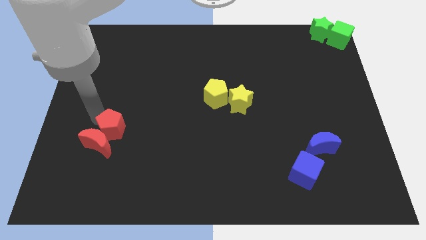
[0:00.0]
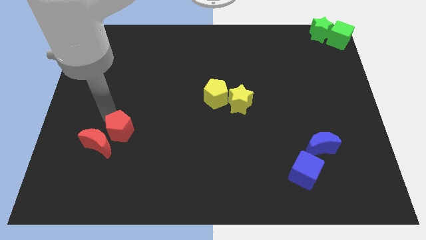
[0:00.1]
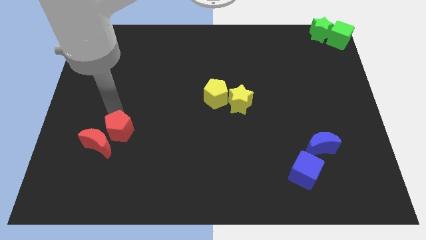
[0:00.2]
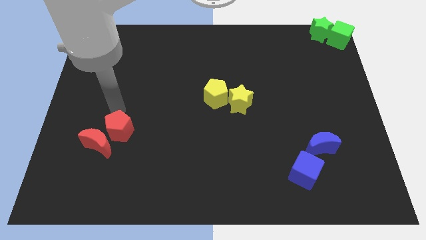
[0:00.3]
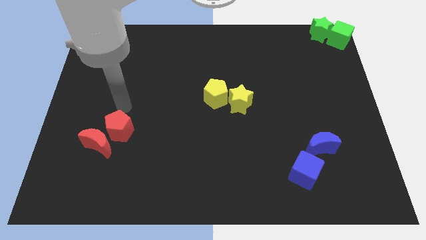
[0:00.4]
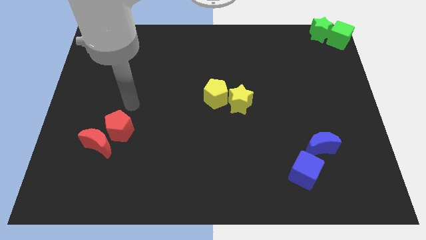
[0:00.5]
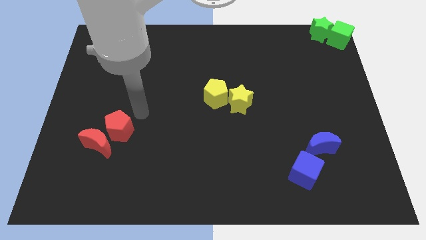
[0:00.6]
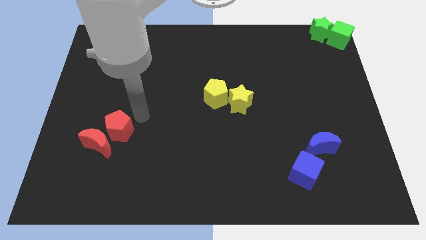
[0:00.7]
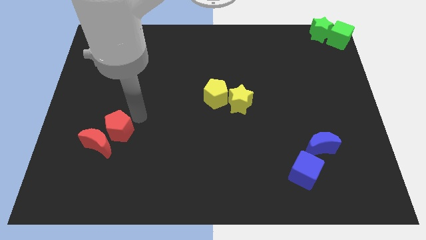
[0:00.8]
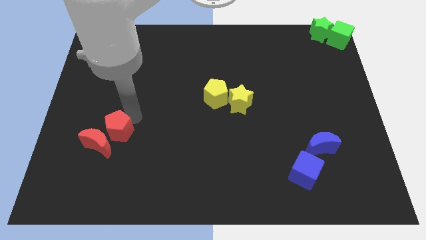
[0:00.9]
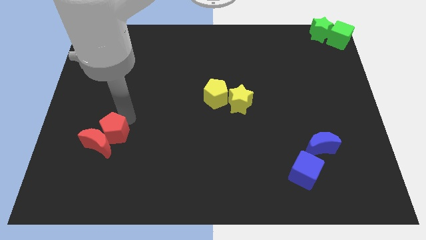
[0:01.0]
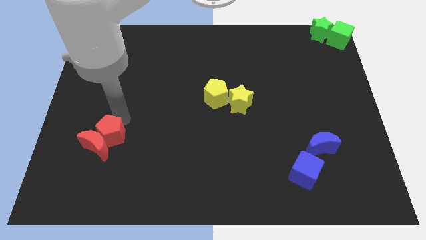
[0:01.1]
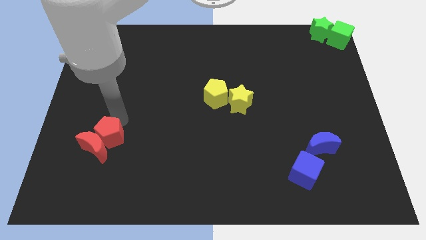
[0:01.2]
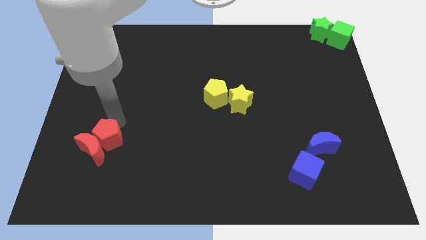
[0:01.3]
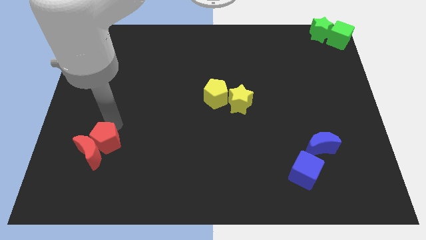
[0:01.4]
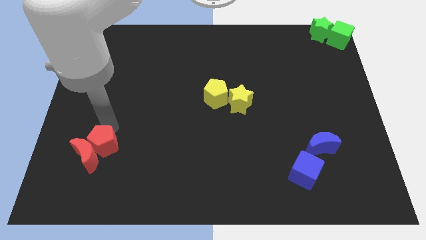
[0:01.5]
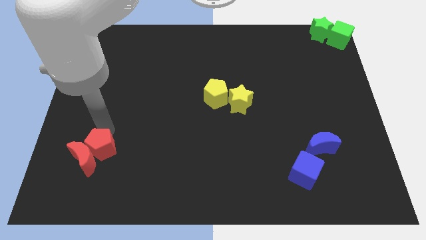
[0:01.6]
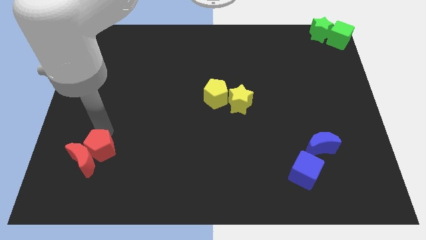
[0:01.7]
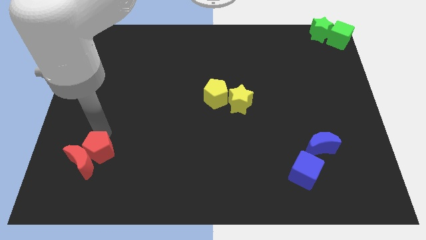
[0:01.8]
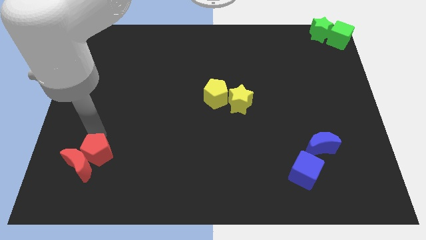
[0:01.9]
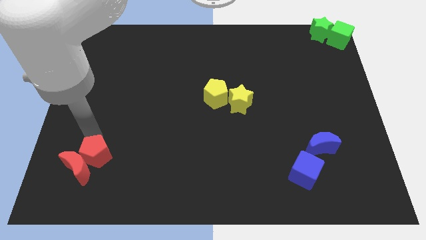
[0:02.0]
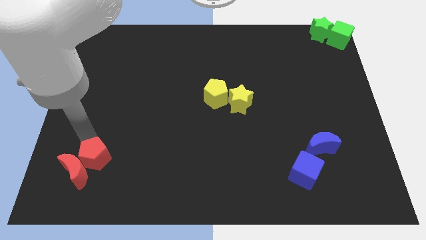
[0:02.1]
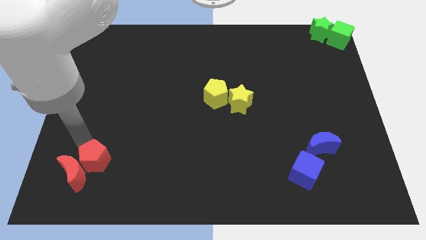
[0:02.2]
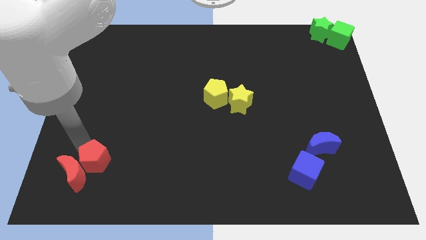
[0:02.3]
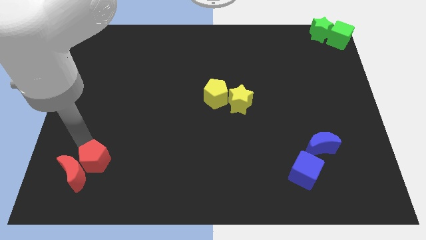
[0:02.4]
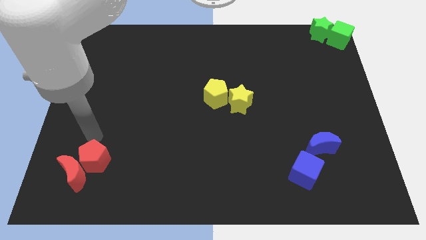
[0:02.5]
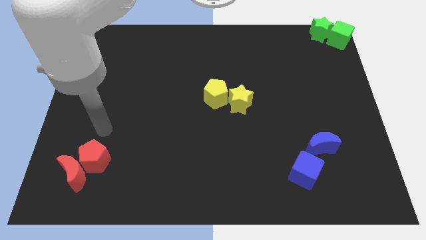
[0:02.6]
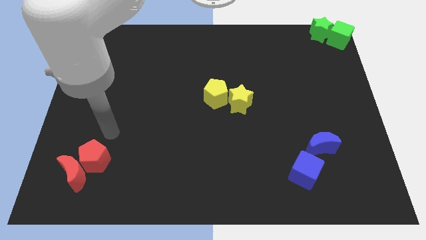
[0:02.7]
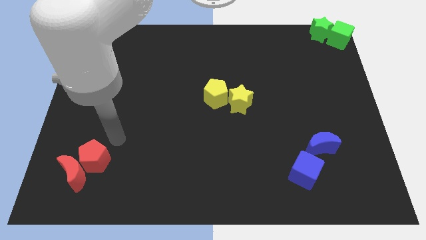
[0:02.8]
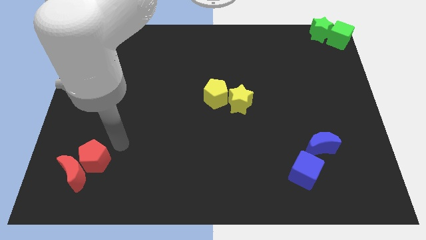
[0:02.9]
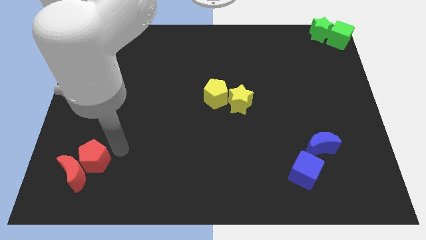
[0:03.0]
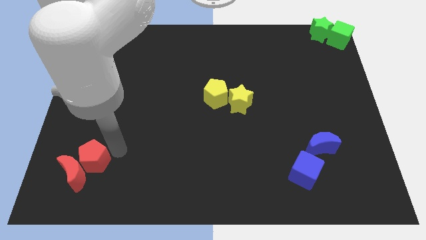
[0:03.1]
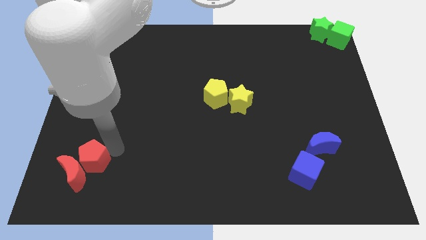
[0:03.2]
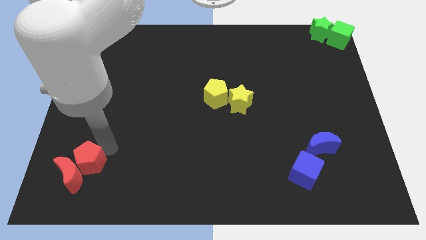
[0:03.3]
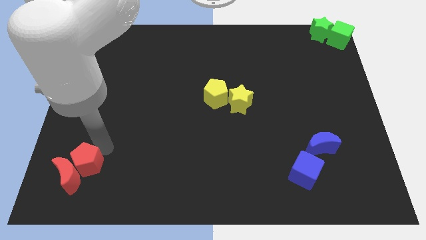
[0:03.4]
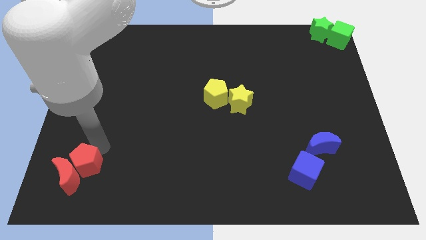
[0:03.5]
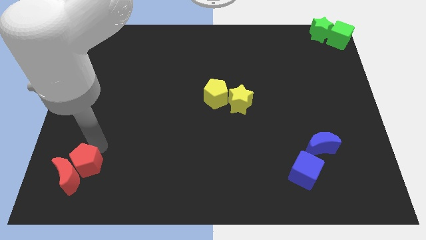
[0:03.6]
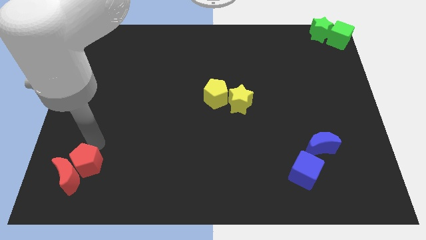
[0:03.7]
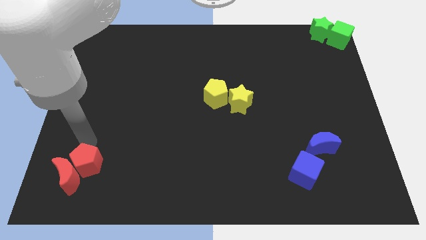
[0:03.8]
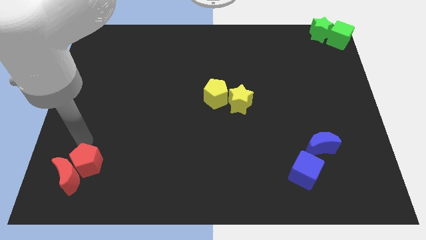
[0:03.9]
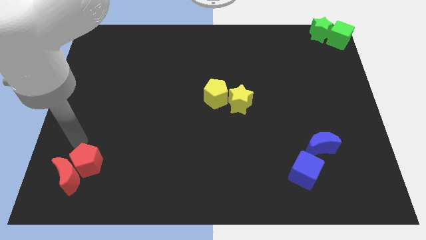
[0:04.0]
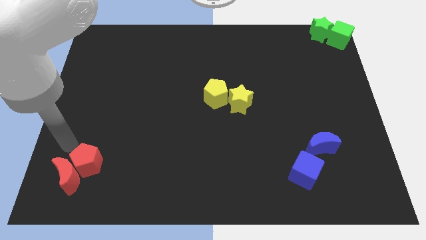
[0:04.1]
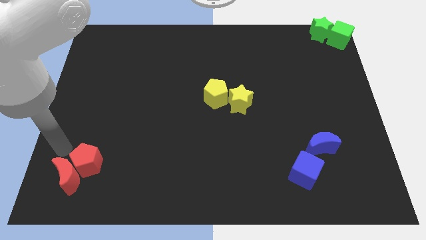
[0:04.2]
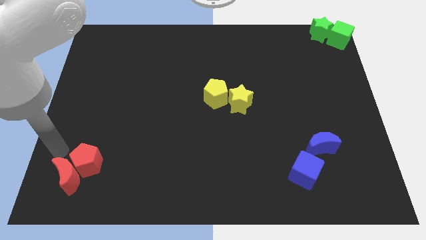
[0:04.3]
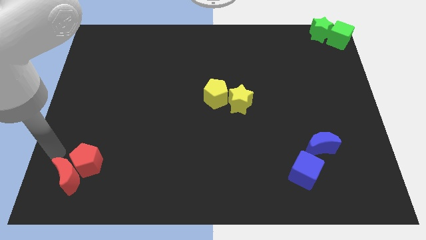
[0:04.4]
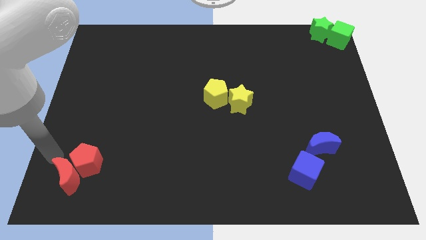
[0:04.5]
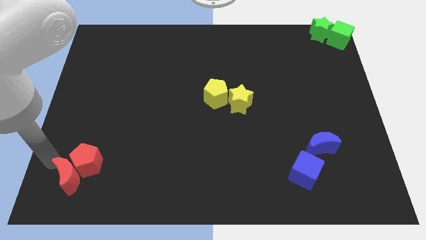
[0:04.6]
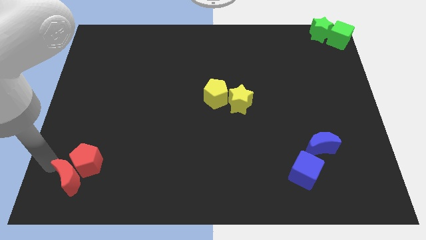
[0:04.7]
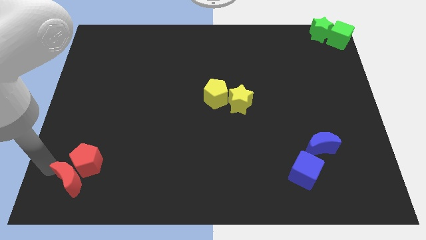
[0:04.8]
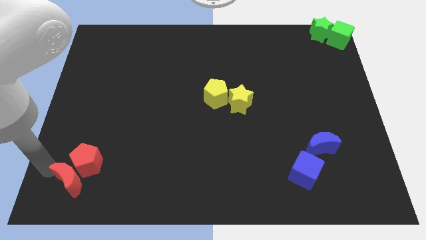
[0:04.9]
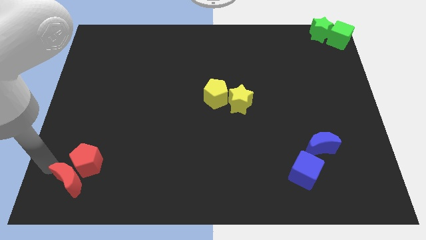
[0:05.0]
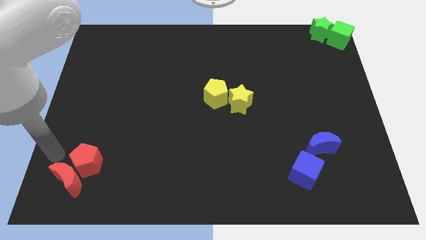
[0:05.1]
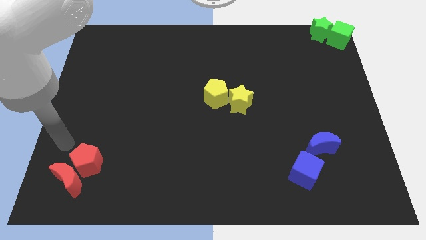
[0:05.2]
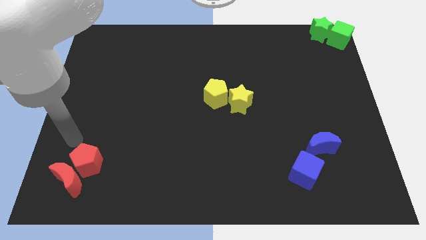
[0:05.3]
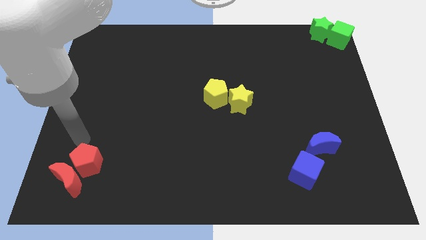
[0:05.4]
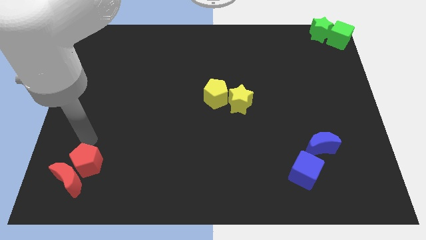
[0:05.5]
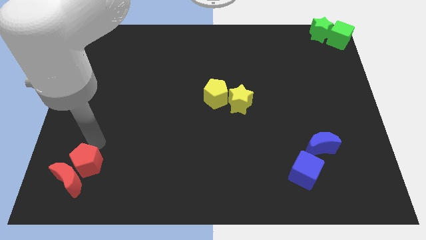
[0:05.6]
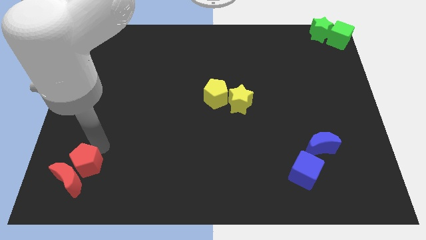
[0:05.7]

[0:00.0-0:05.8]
push the red pentagon and red moon to the left side of the board

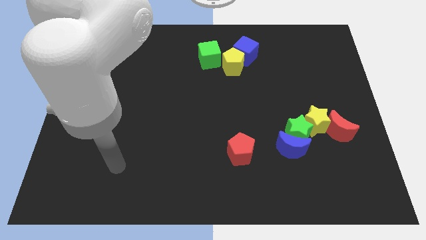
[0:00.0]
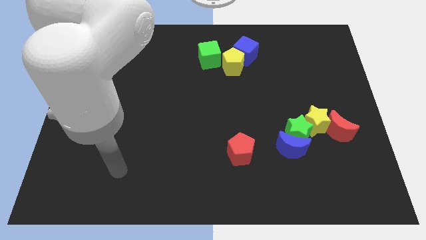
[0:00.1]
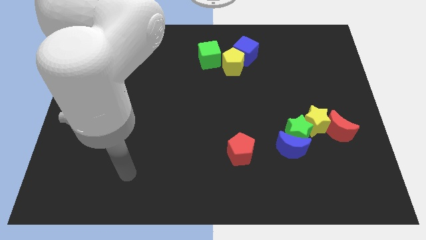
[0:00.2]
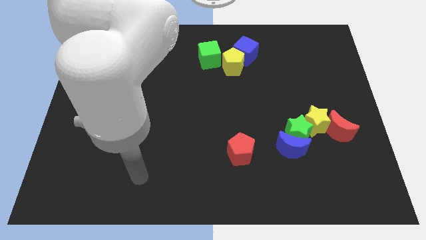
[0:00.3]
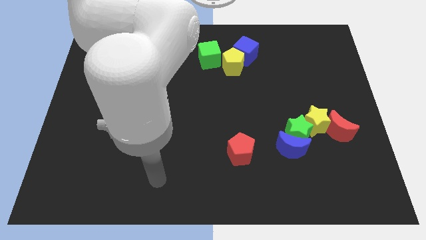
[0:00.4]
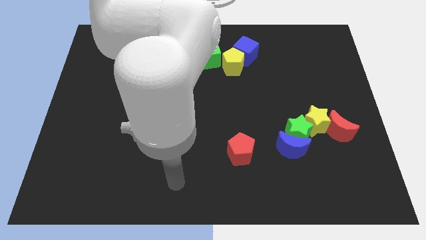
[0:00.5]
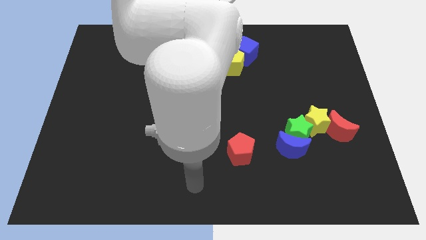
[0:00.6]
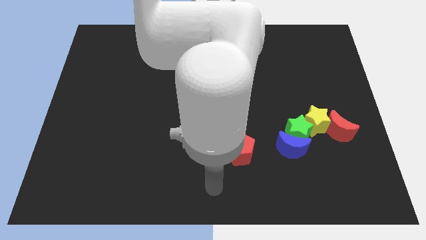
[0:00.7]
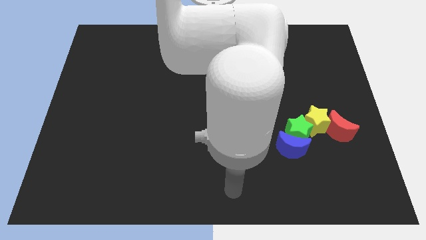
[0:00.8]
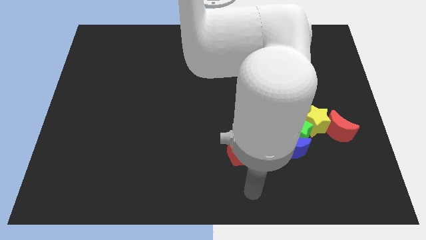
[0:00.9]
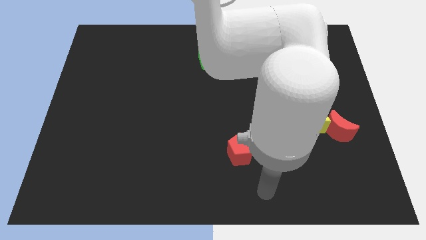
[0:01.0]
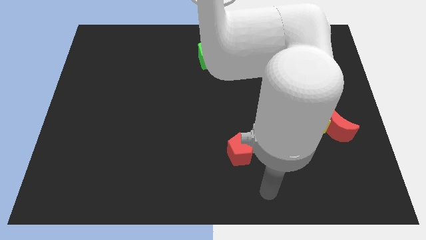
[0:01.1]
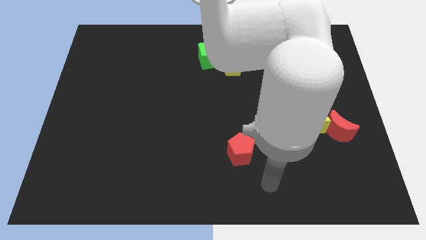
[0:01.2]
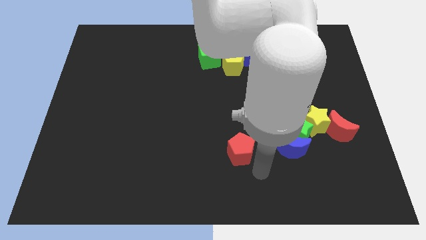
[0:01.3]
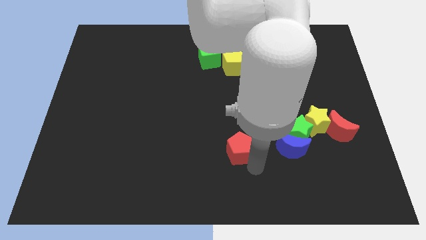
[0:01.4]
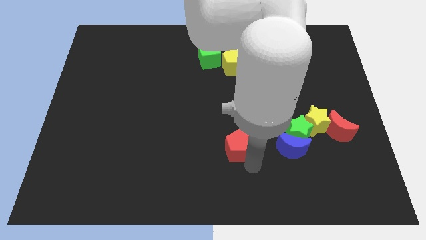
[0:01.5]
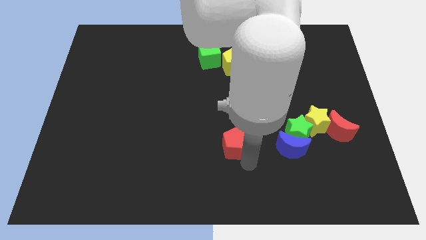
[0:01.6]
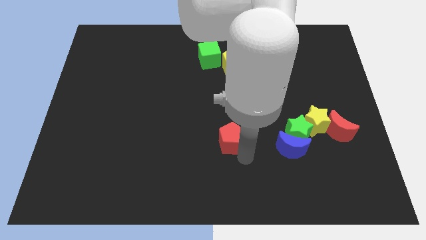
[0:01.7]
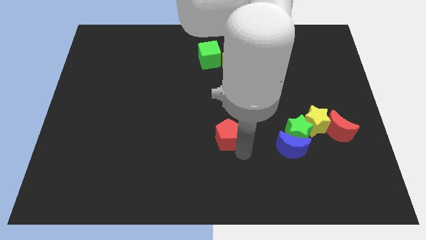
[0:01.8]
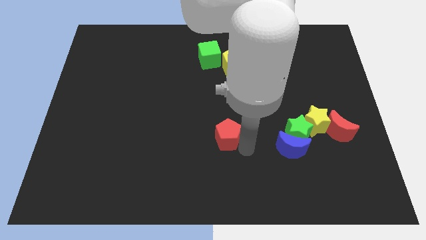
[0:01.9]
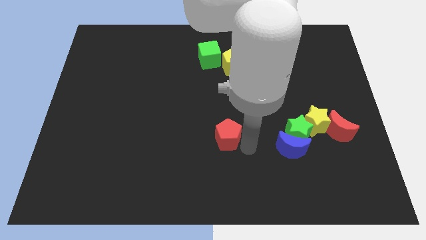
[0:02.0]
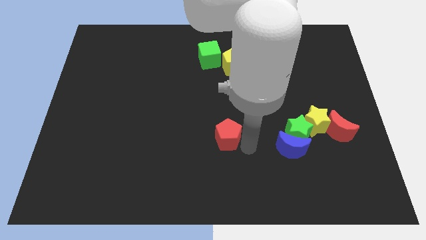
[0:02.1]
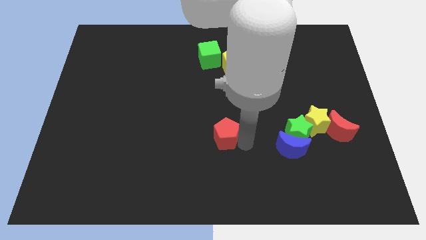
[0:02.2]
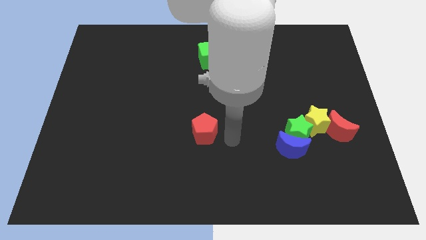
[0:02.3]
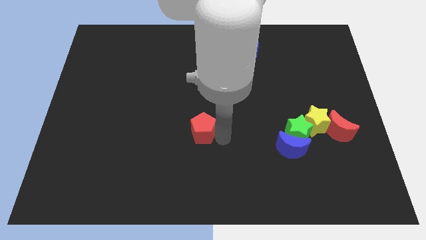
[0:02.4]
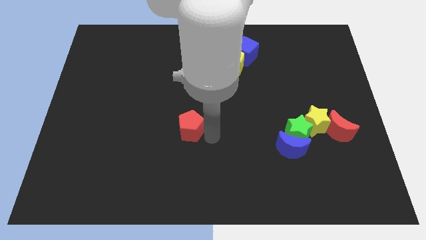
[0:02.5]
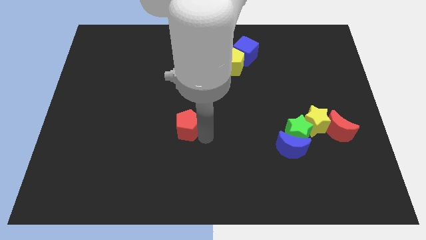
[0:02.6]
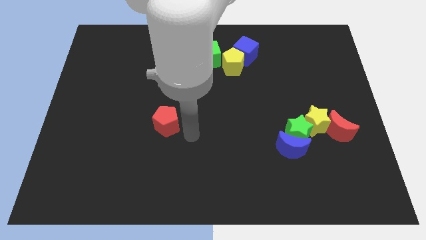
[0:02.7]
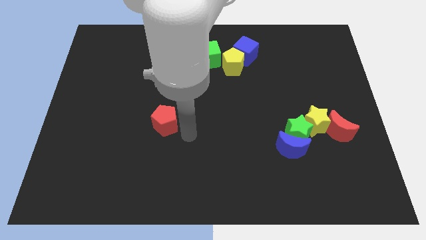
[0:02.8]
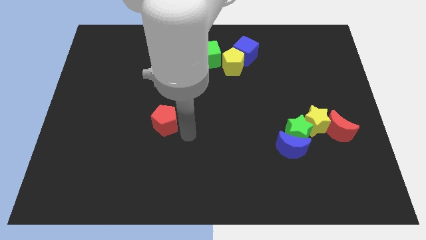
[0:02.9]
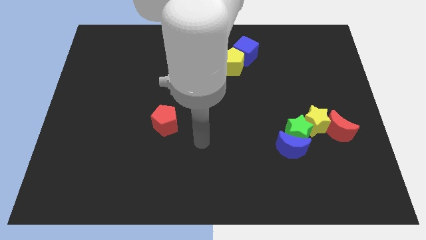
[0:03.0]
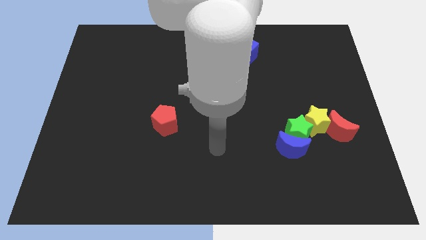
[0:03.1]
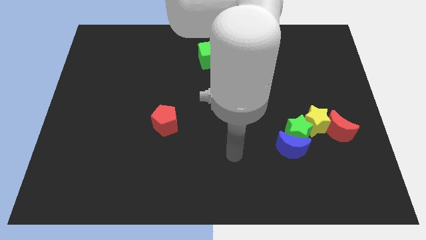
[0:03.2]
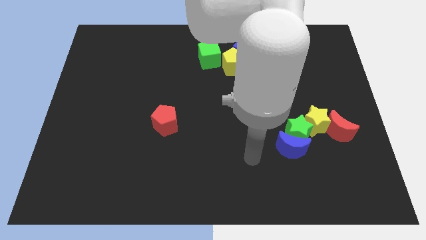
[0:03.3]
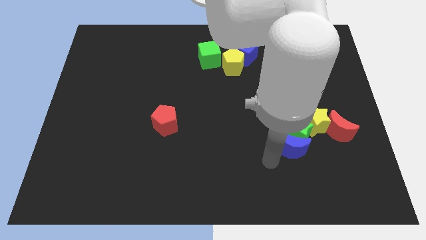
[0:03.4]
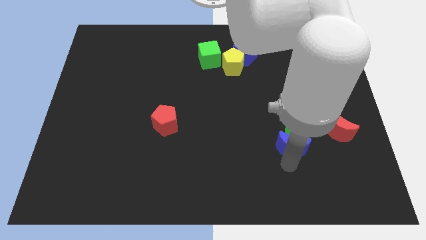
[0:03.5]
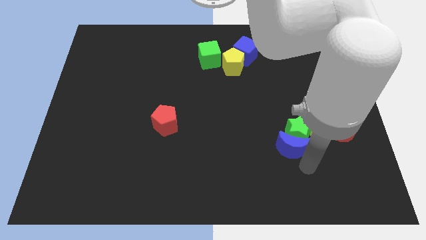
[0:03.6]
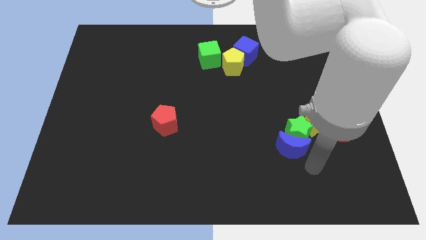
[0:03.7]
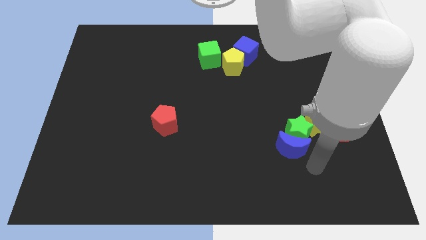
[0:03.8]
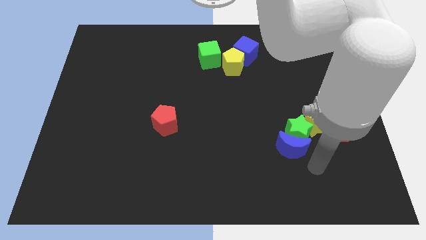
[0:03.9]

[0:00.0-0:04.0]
move red pentagon to left side
